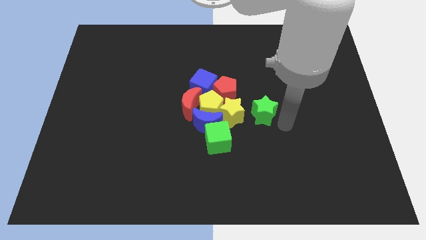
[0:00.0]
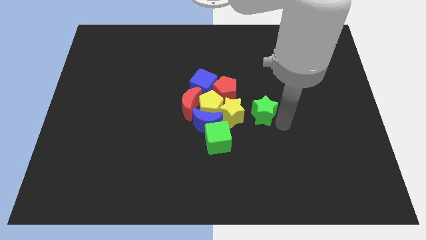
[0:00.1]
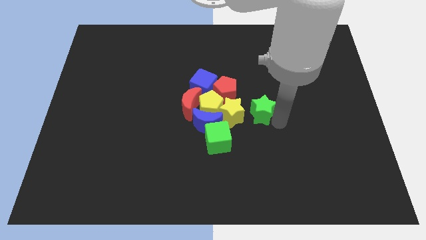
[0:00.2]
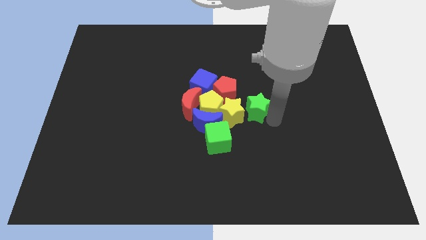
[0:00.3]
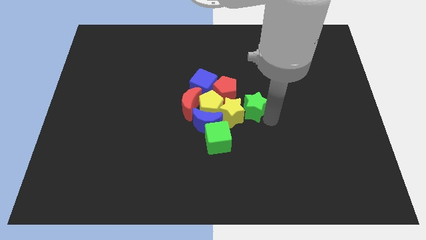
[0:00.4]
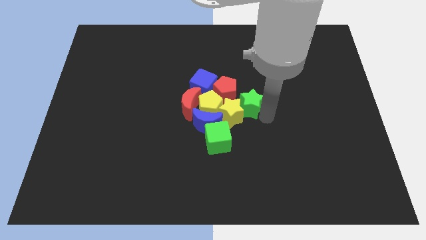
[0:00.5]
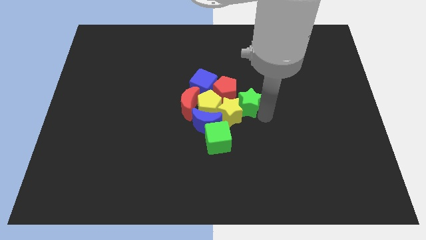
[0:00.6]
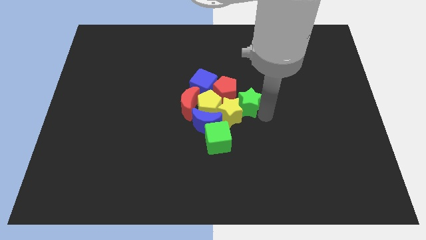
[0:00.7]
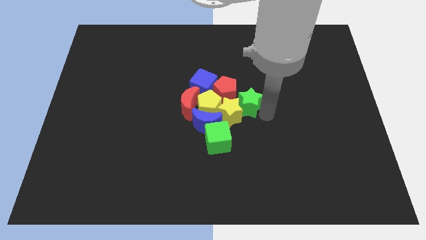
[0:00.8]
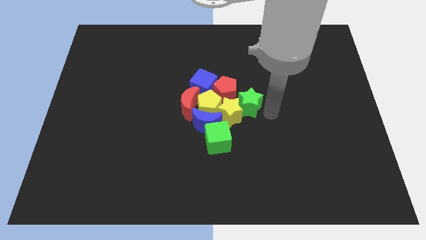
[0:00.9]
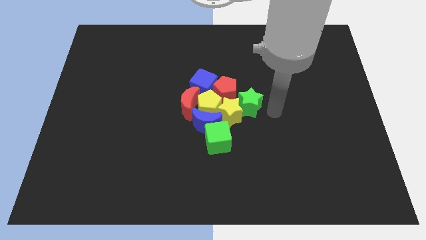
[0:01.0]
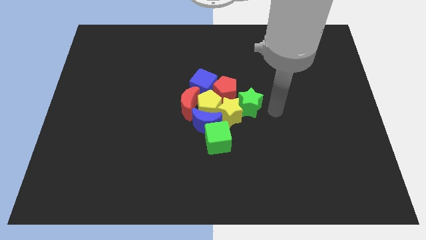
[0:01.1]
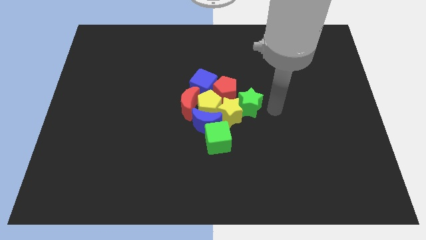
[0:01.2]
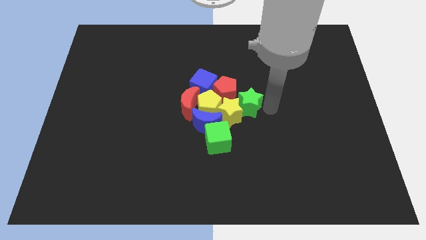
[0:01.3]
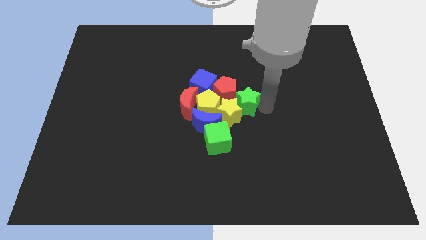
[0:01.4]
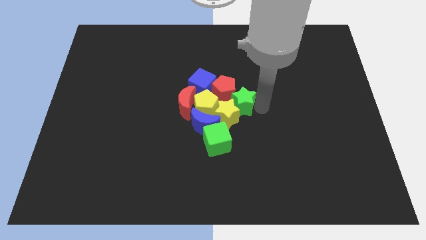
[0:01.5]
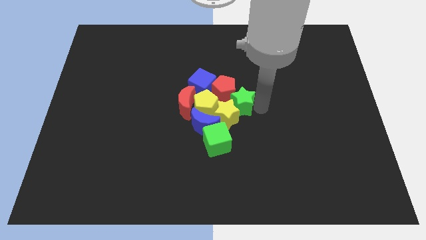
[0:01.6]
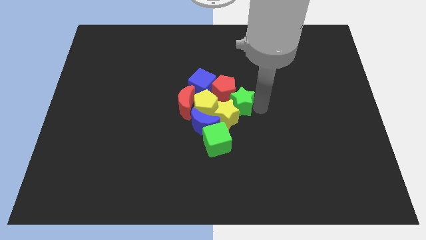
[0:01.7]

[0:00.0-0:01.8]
move the green star into the group of blocks

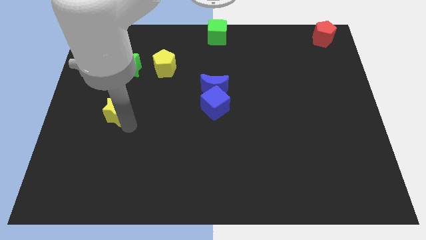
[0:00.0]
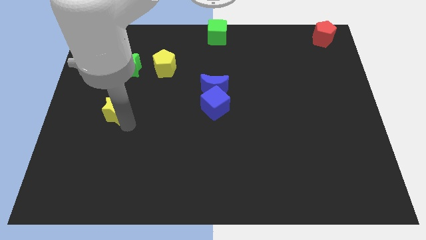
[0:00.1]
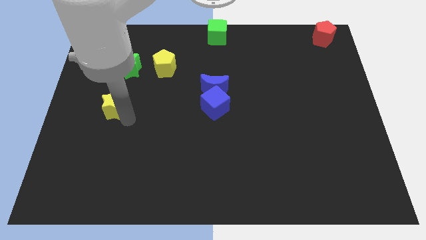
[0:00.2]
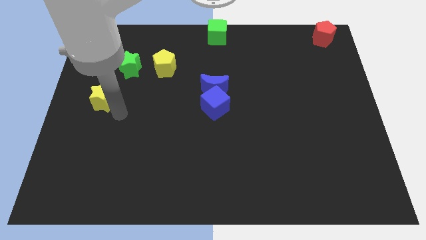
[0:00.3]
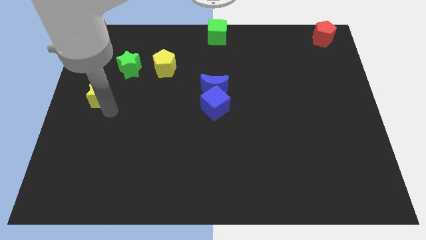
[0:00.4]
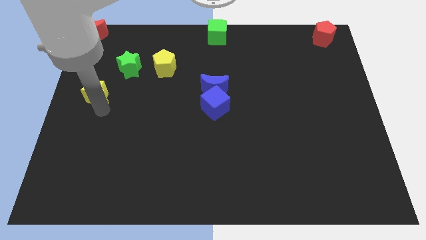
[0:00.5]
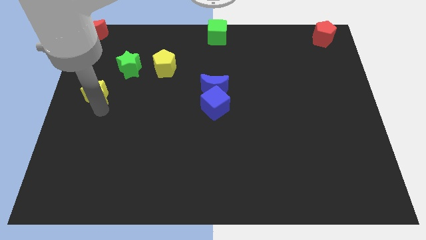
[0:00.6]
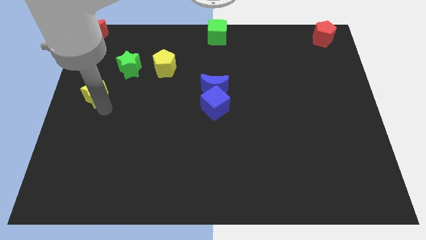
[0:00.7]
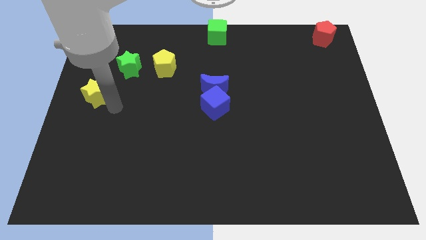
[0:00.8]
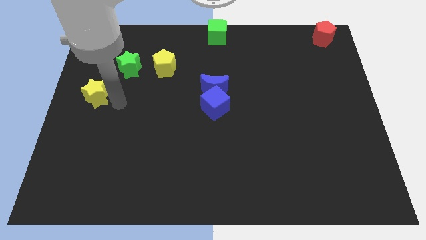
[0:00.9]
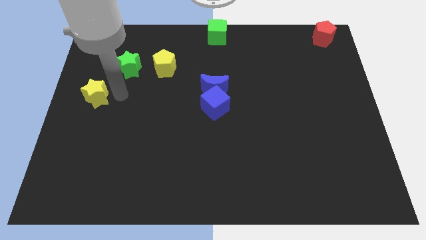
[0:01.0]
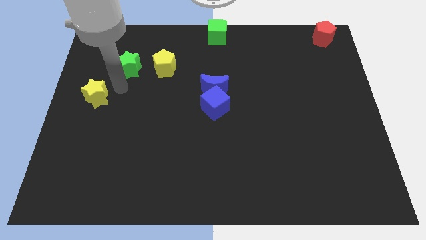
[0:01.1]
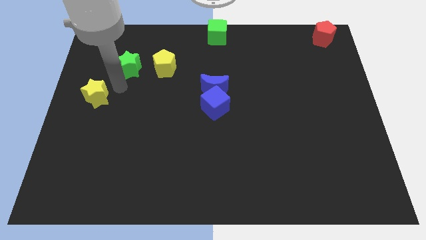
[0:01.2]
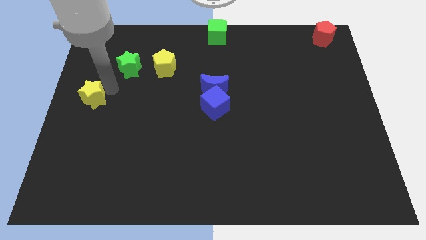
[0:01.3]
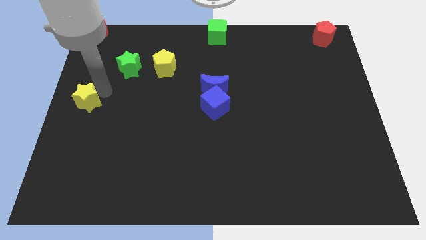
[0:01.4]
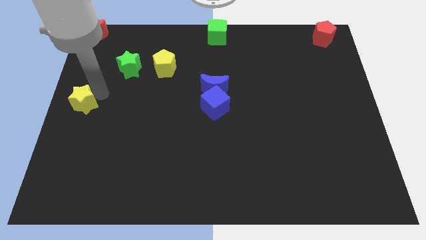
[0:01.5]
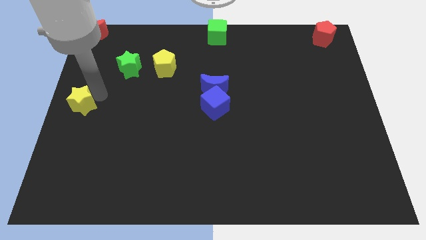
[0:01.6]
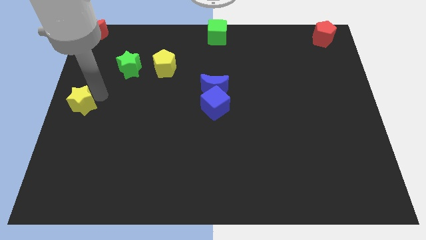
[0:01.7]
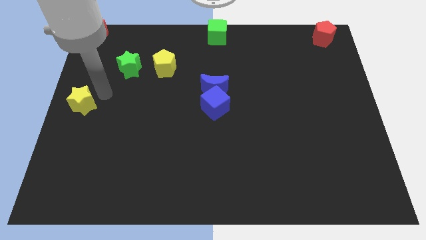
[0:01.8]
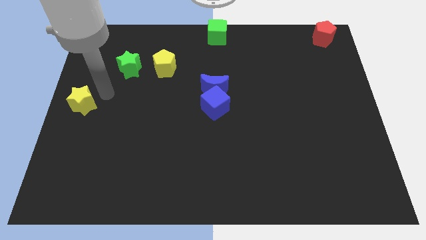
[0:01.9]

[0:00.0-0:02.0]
place yellow start towards left middle end

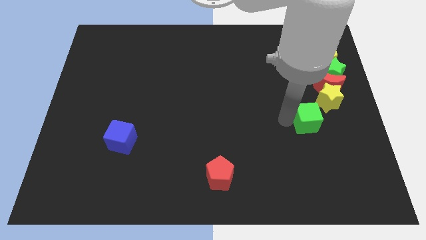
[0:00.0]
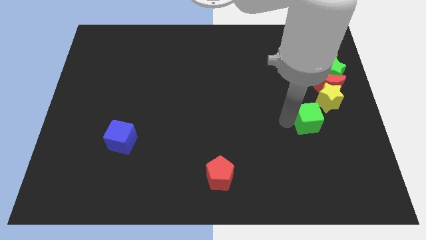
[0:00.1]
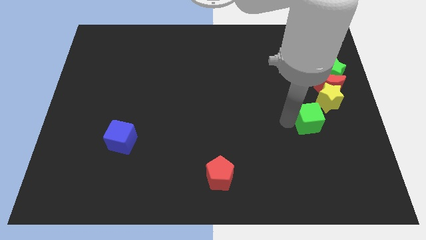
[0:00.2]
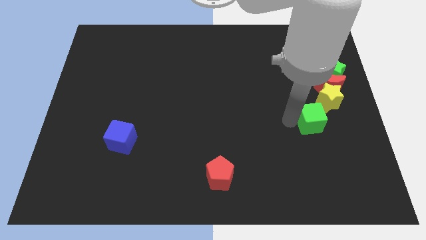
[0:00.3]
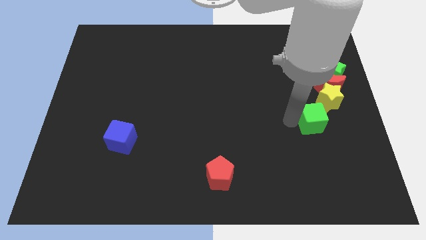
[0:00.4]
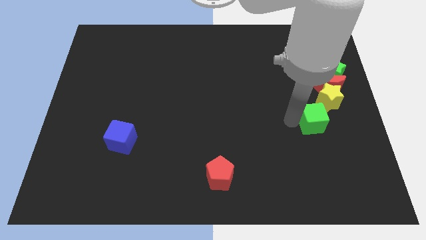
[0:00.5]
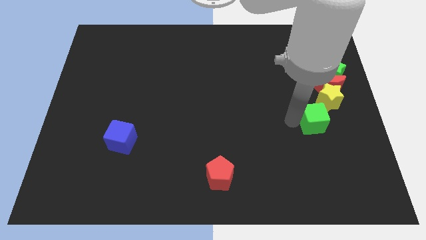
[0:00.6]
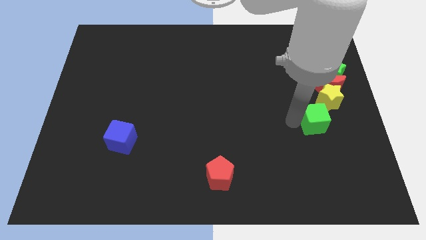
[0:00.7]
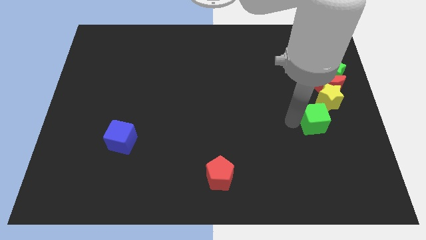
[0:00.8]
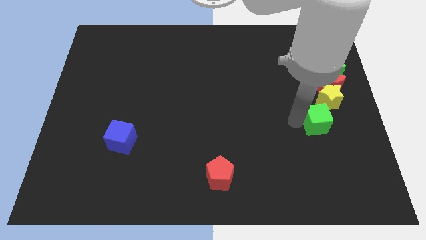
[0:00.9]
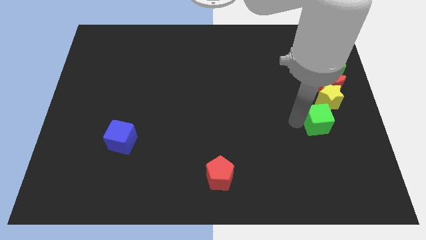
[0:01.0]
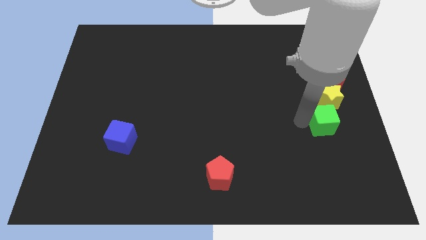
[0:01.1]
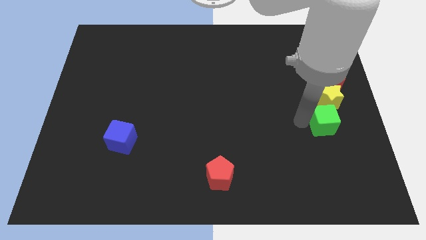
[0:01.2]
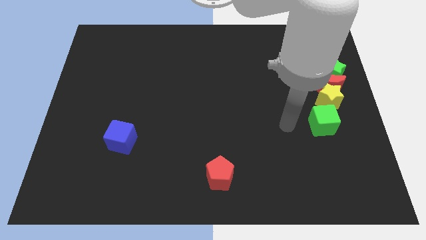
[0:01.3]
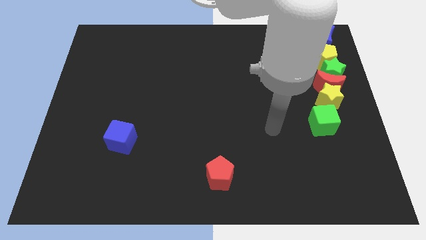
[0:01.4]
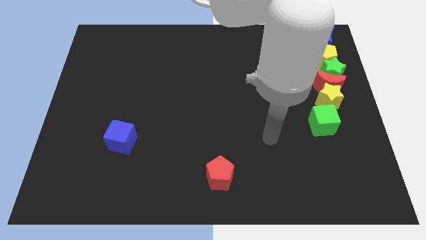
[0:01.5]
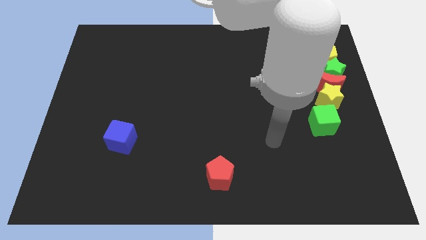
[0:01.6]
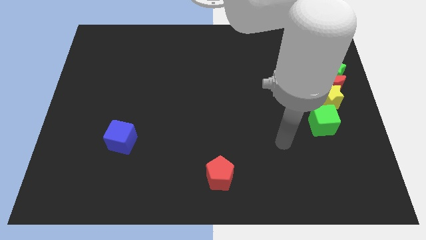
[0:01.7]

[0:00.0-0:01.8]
move the green cube to the bottom of yellow star

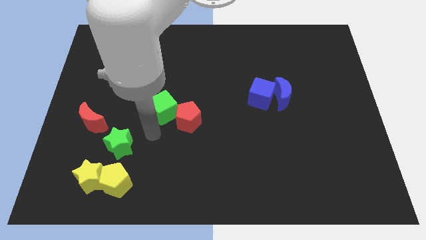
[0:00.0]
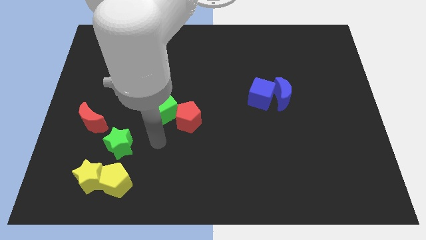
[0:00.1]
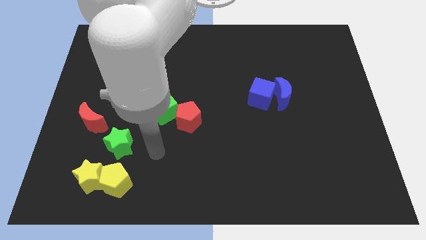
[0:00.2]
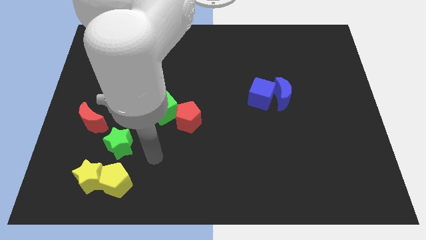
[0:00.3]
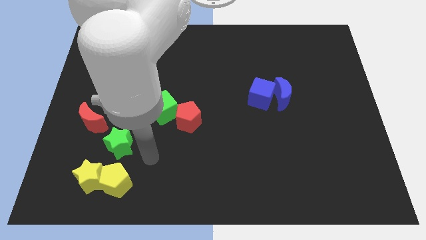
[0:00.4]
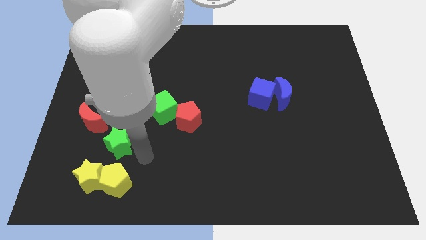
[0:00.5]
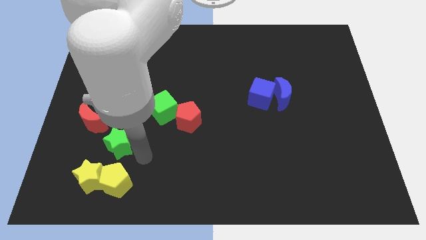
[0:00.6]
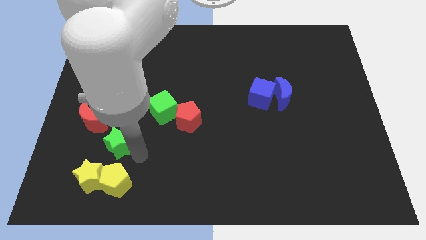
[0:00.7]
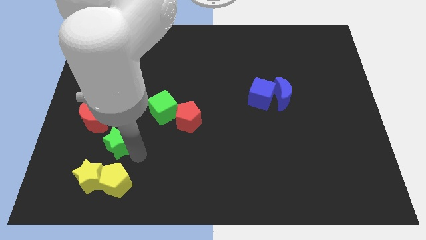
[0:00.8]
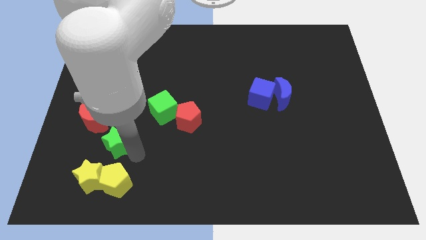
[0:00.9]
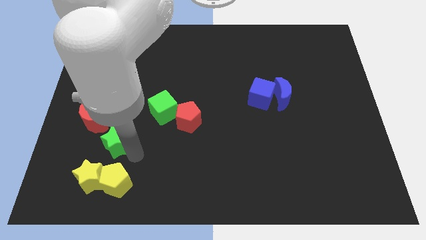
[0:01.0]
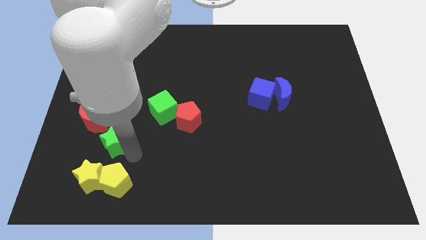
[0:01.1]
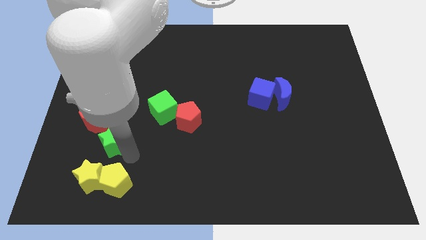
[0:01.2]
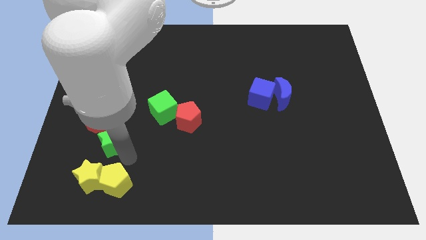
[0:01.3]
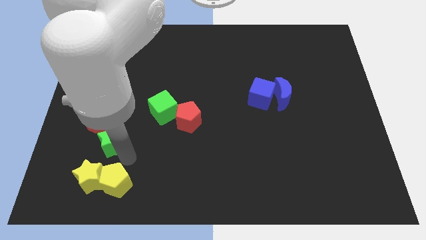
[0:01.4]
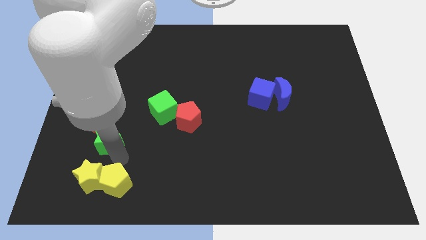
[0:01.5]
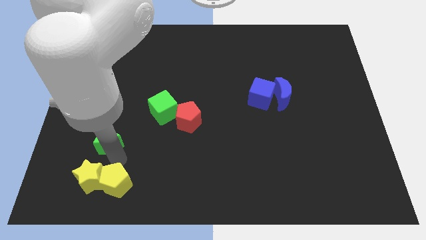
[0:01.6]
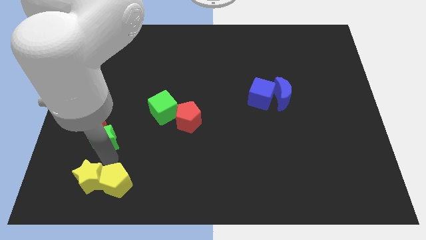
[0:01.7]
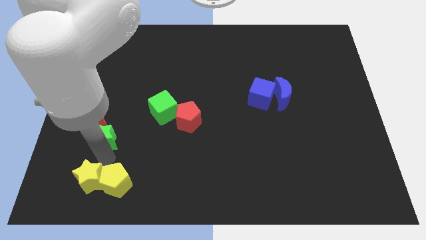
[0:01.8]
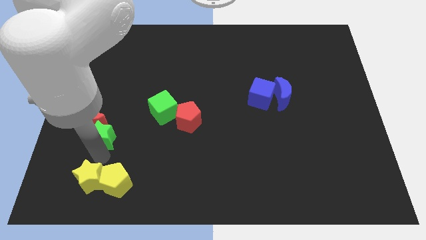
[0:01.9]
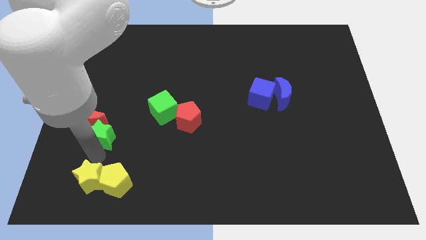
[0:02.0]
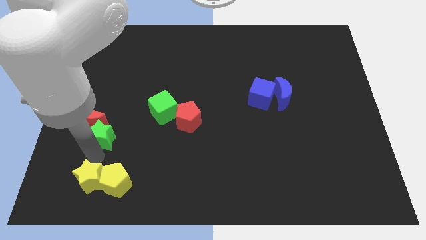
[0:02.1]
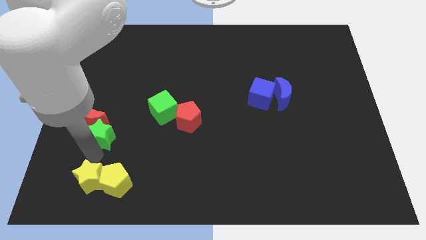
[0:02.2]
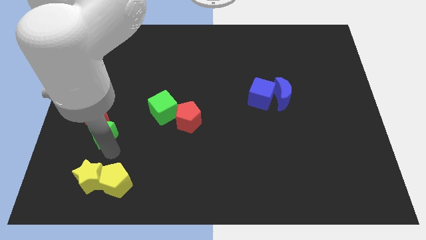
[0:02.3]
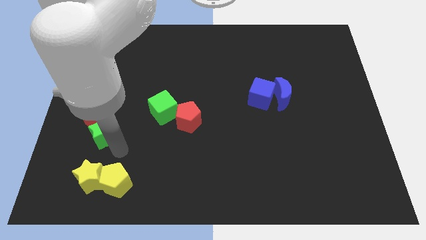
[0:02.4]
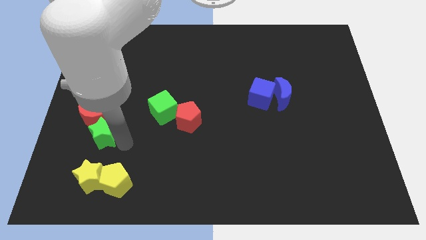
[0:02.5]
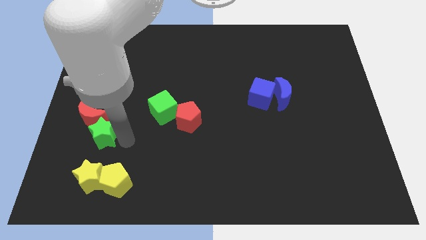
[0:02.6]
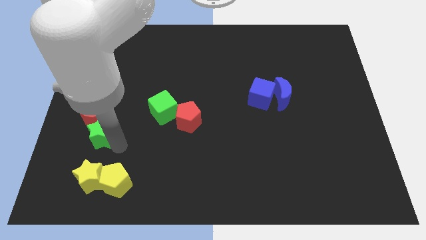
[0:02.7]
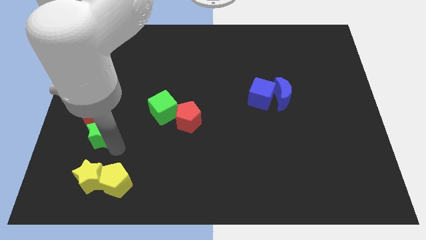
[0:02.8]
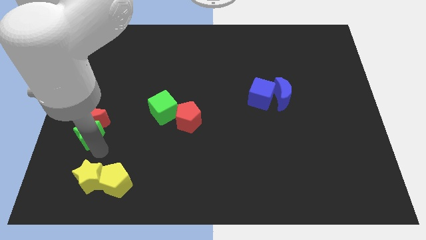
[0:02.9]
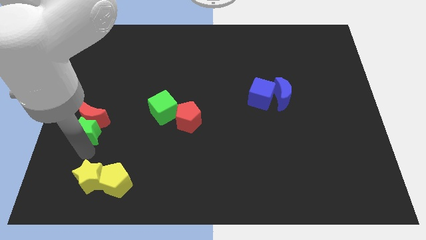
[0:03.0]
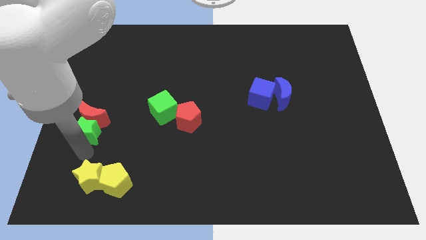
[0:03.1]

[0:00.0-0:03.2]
push the green star into the red moon

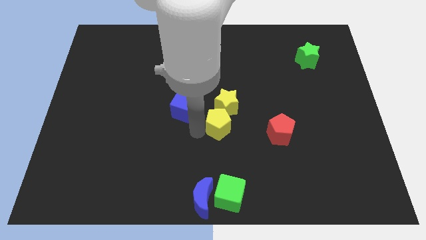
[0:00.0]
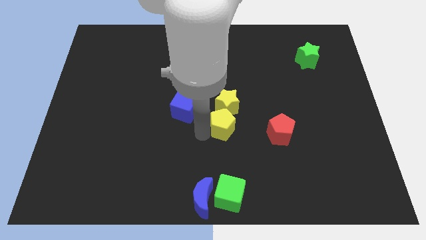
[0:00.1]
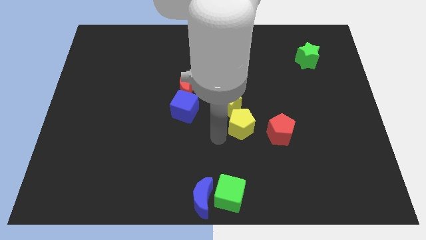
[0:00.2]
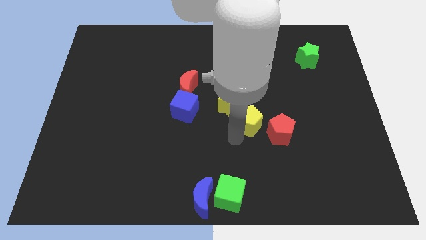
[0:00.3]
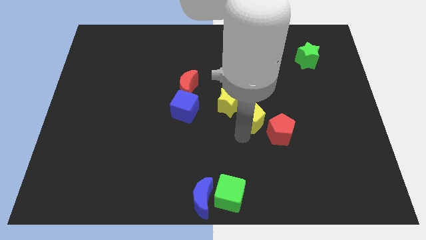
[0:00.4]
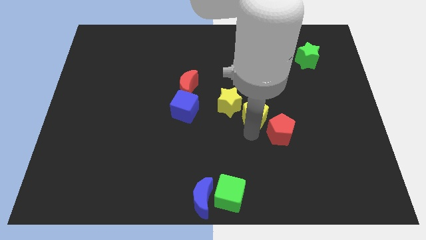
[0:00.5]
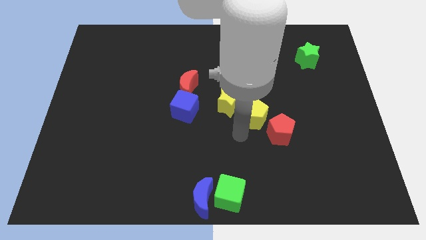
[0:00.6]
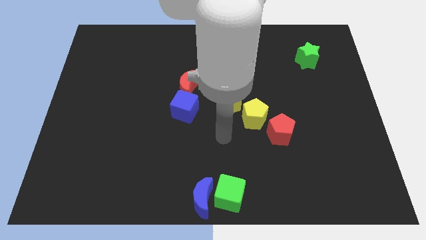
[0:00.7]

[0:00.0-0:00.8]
place yellow pentagon in between the yellow star and red pentagon
